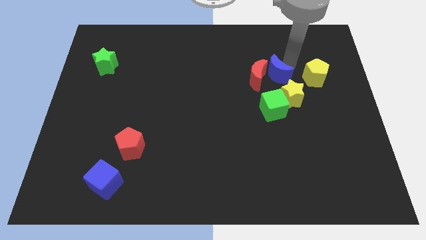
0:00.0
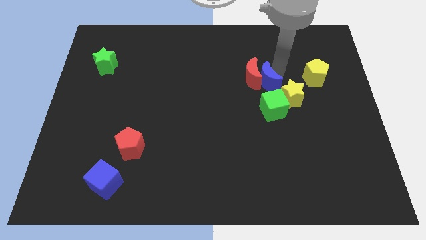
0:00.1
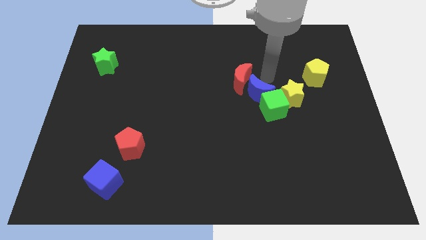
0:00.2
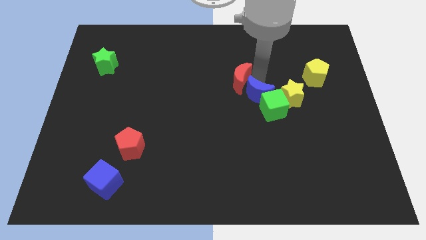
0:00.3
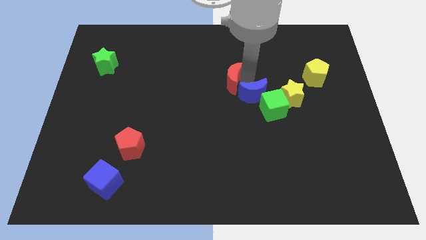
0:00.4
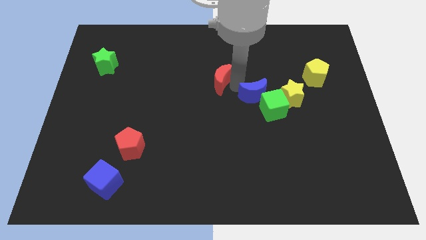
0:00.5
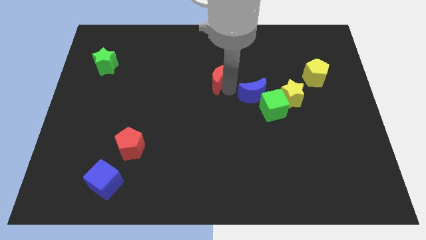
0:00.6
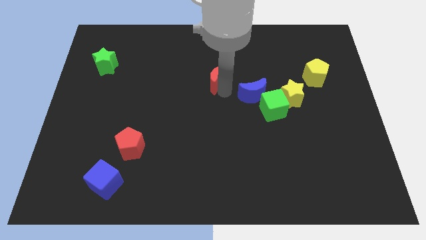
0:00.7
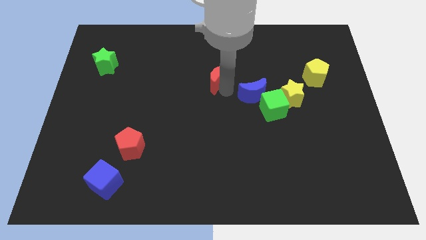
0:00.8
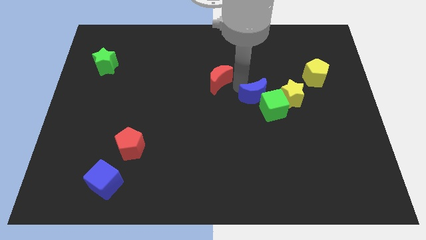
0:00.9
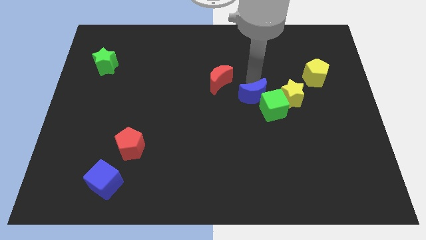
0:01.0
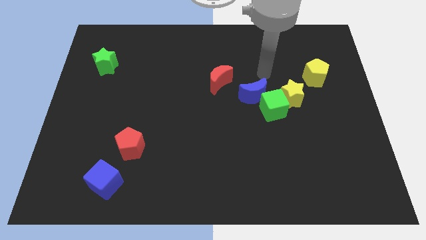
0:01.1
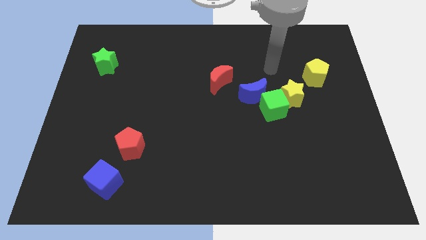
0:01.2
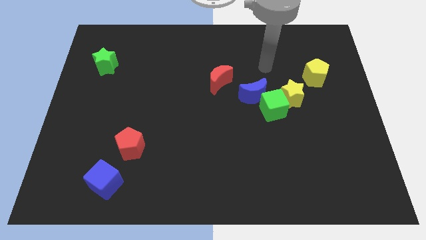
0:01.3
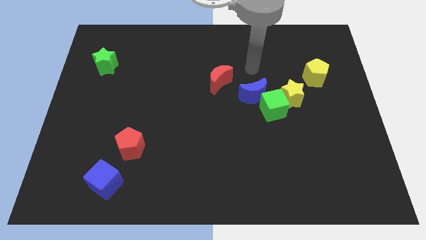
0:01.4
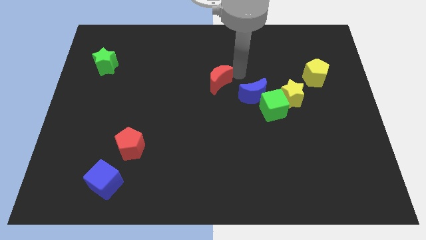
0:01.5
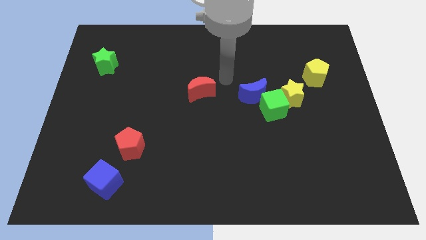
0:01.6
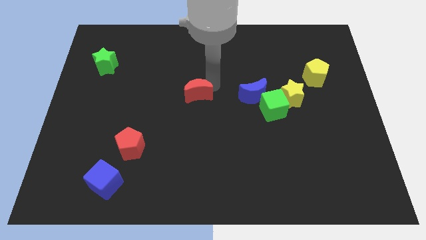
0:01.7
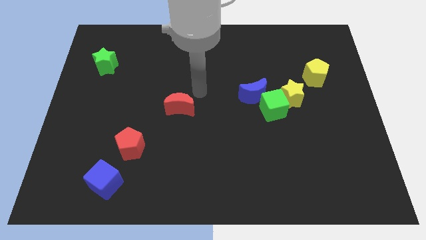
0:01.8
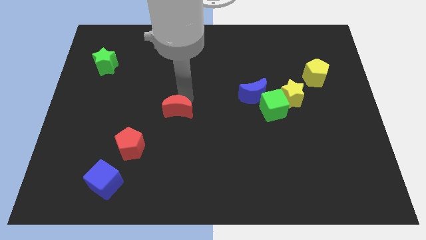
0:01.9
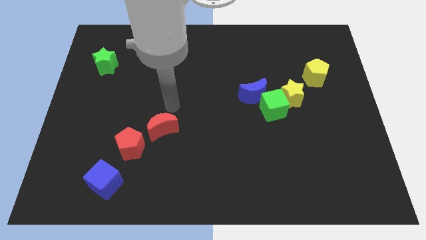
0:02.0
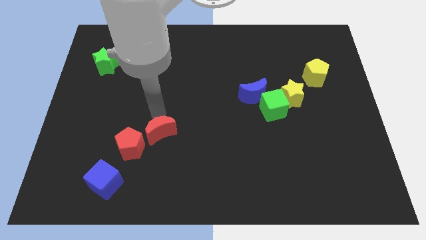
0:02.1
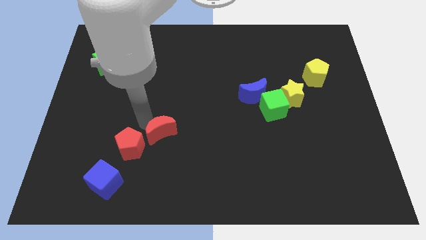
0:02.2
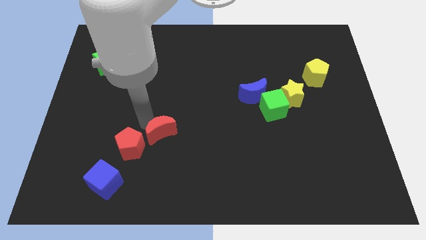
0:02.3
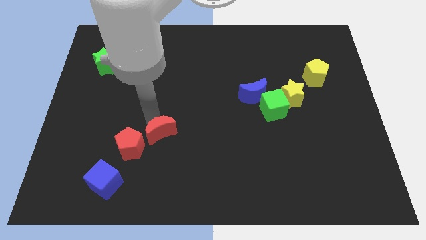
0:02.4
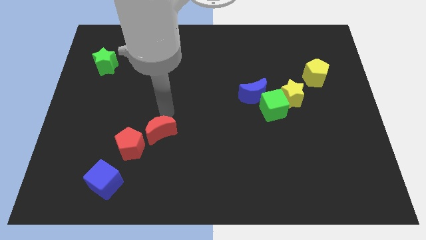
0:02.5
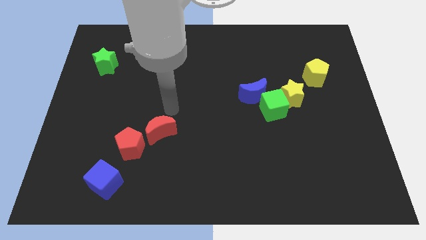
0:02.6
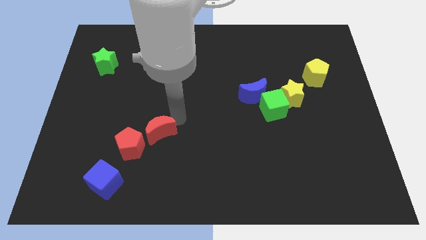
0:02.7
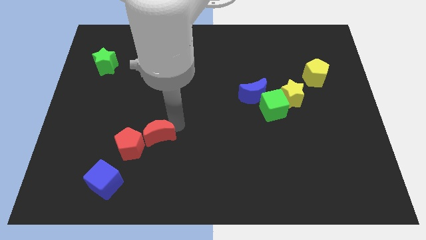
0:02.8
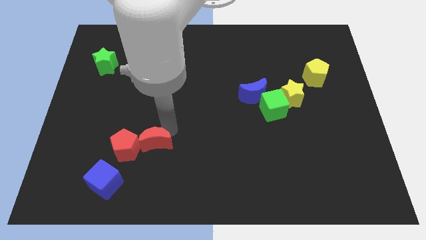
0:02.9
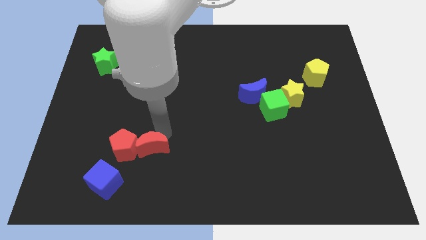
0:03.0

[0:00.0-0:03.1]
move the red moon close to the red pentagon

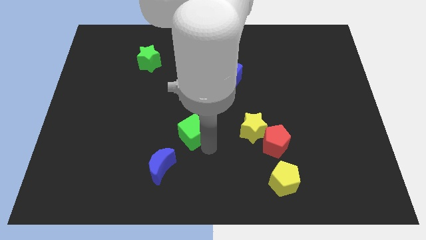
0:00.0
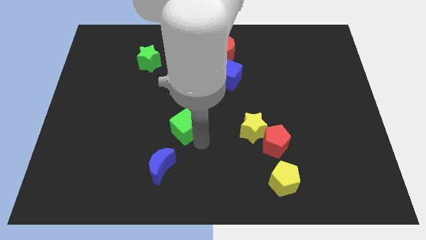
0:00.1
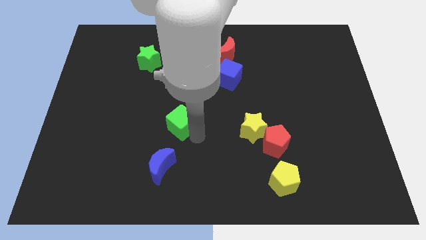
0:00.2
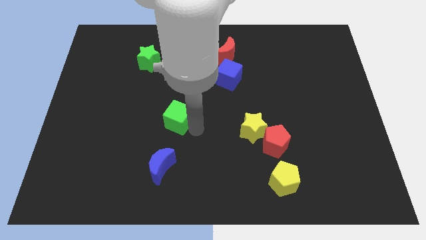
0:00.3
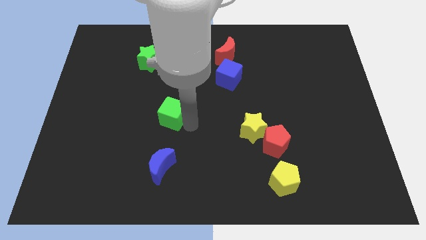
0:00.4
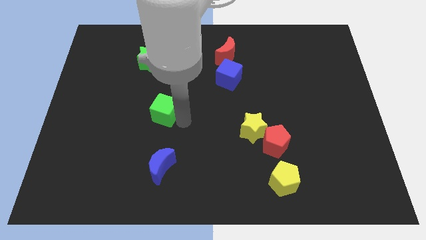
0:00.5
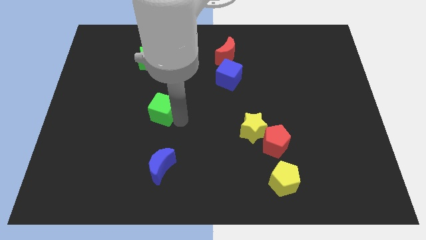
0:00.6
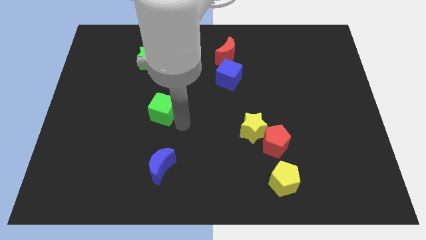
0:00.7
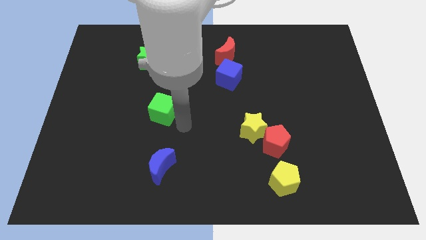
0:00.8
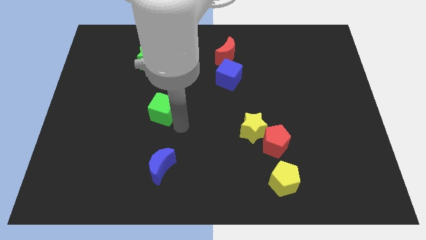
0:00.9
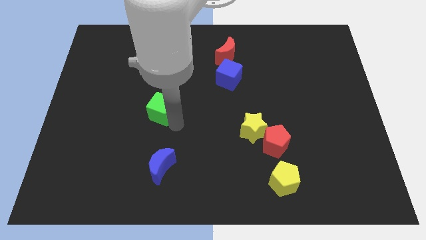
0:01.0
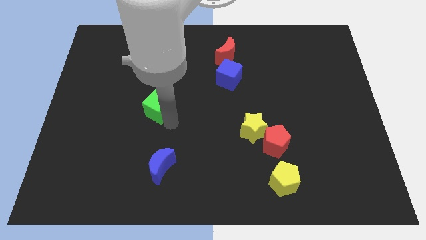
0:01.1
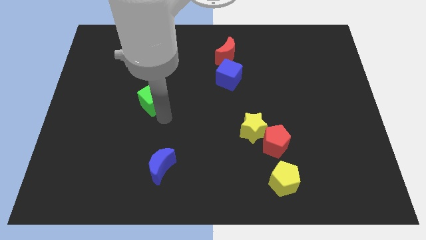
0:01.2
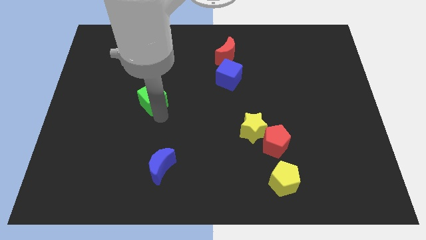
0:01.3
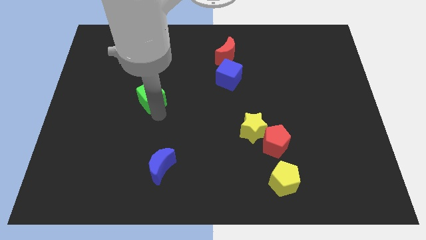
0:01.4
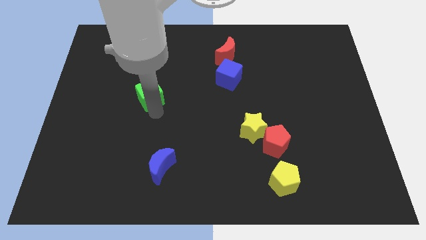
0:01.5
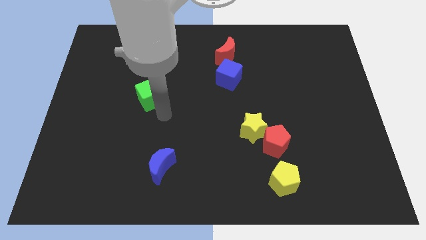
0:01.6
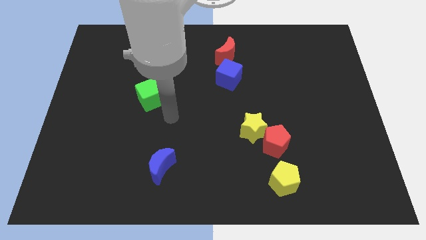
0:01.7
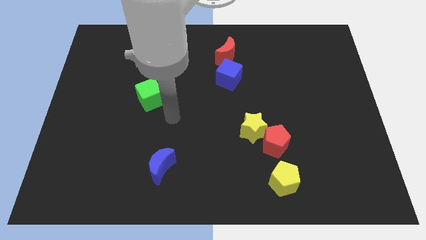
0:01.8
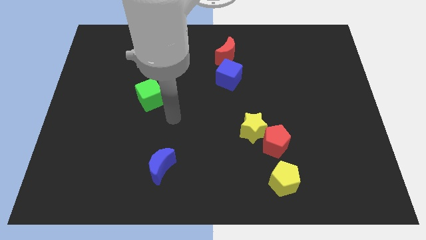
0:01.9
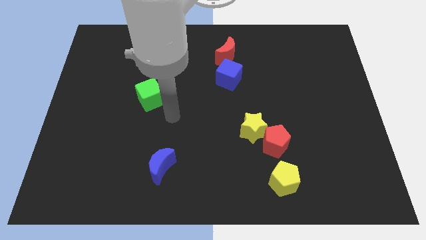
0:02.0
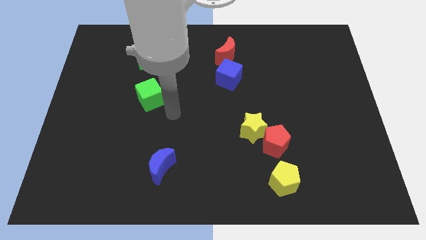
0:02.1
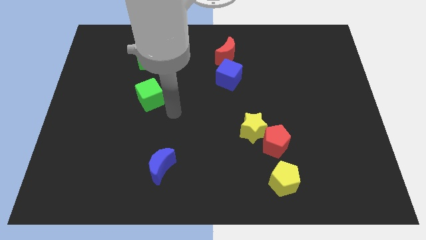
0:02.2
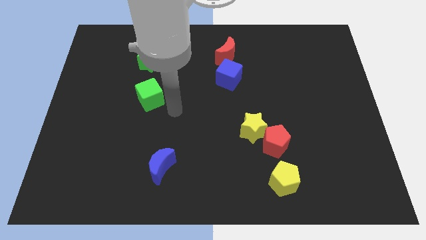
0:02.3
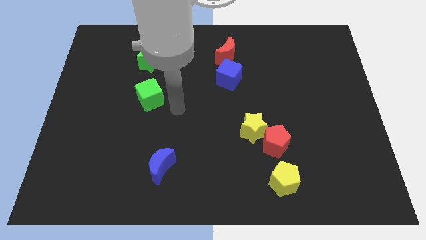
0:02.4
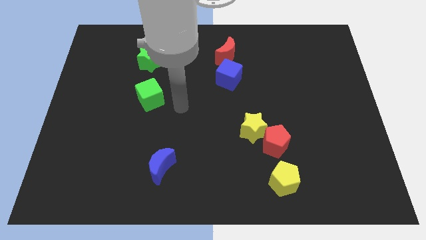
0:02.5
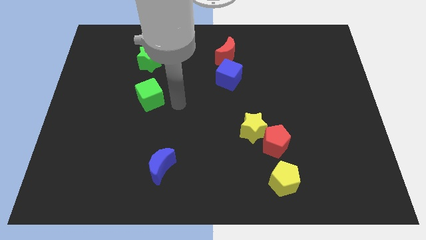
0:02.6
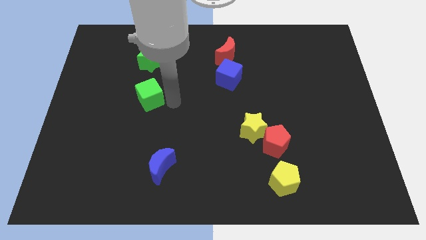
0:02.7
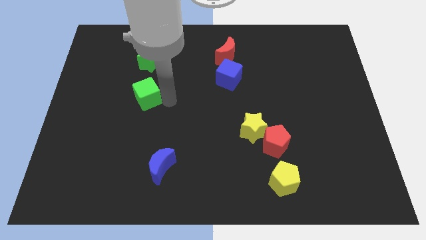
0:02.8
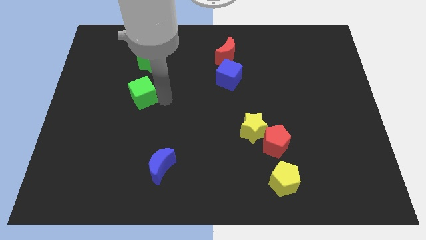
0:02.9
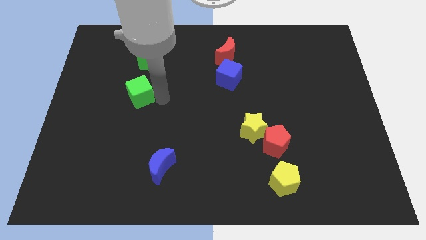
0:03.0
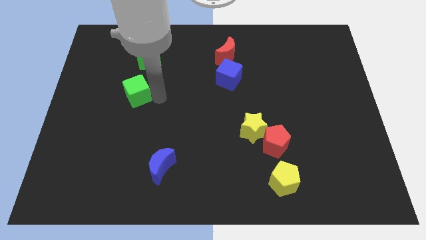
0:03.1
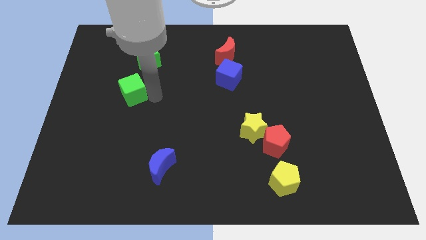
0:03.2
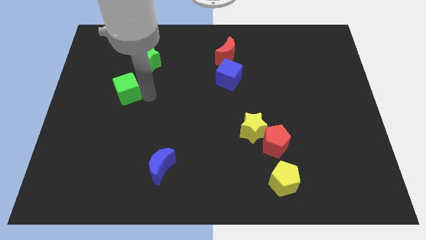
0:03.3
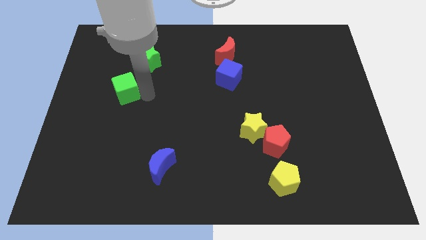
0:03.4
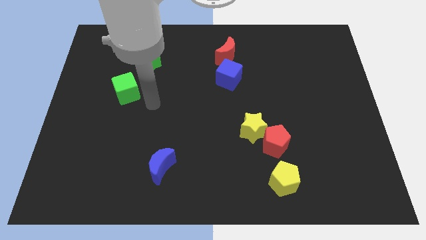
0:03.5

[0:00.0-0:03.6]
place the green cube towards top right

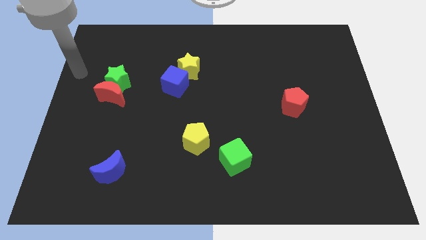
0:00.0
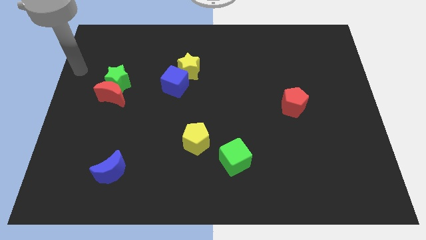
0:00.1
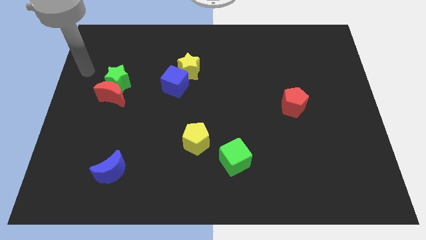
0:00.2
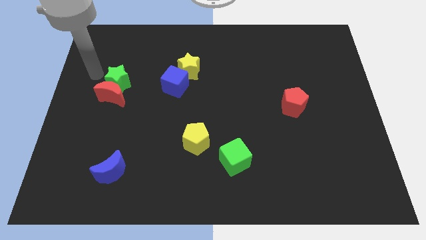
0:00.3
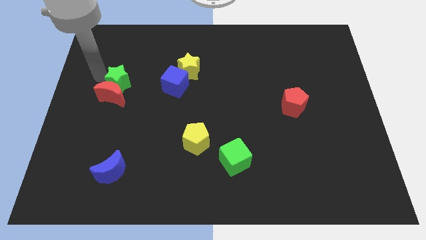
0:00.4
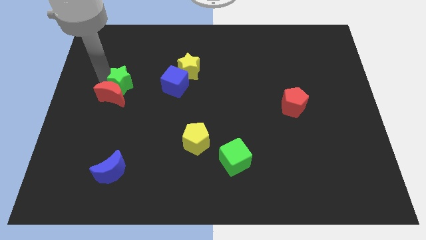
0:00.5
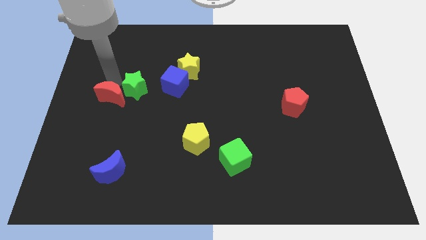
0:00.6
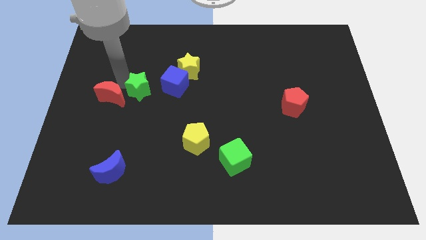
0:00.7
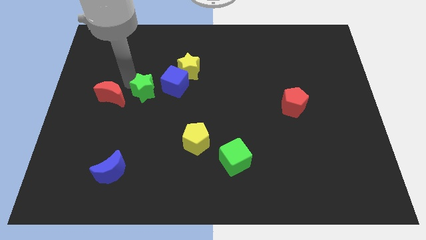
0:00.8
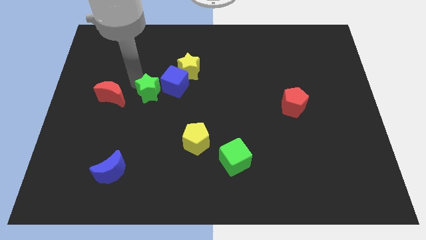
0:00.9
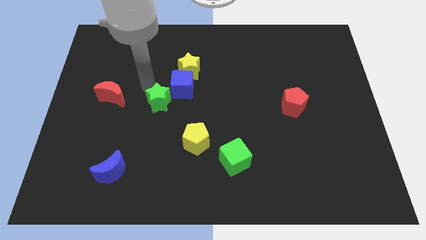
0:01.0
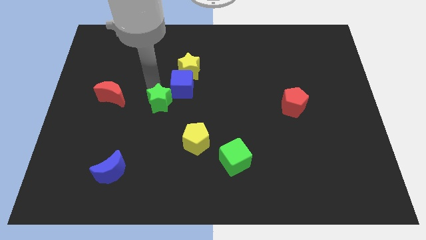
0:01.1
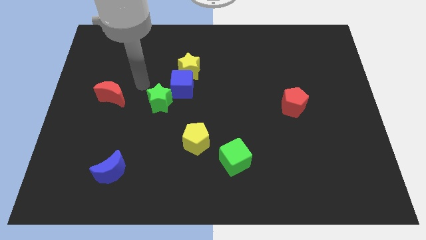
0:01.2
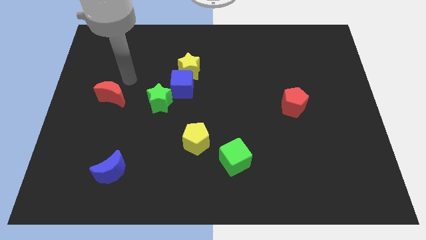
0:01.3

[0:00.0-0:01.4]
place the green stardiagonally bottom left of the blue cube

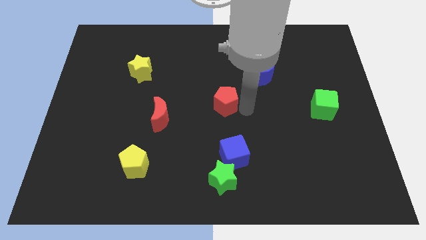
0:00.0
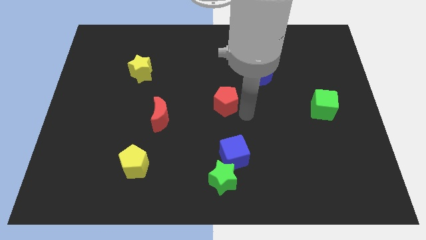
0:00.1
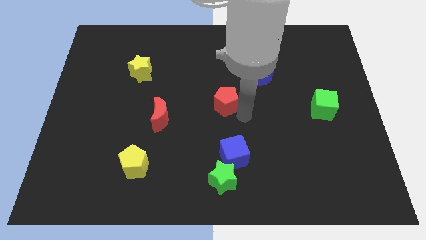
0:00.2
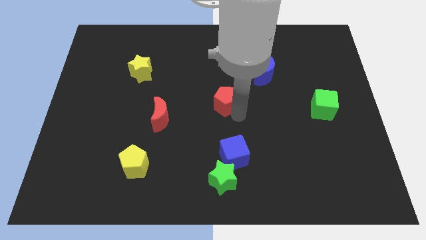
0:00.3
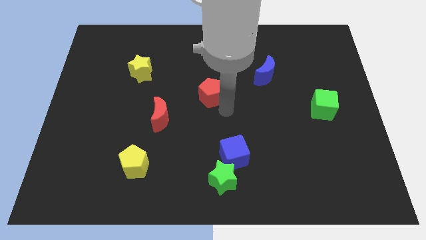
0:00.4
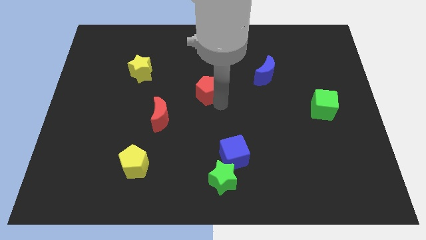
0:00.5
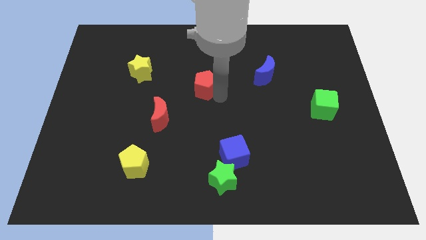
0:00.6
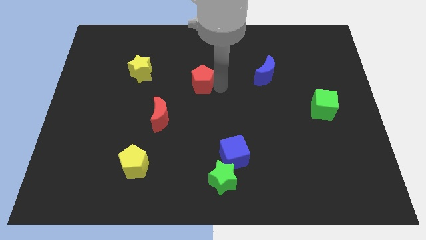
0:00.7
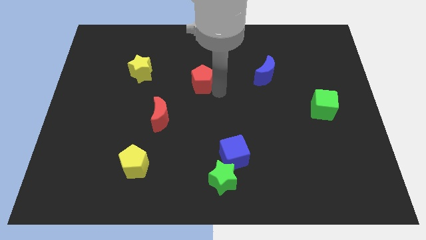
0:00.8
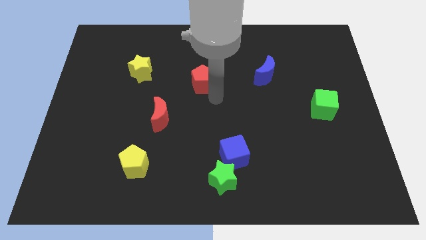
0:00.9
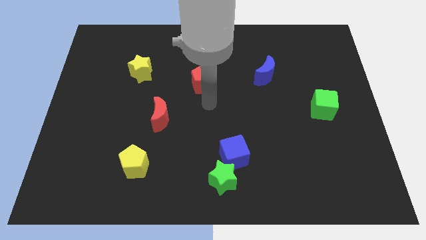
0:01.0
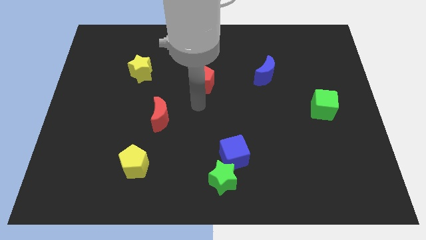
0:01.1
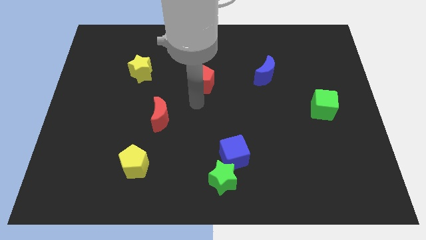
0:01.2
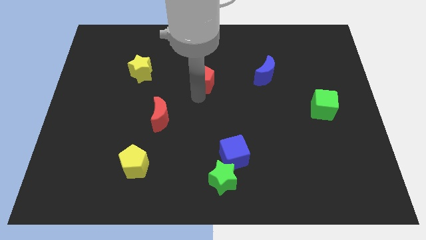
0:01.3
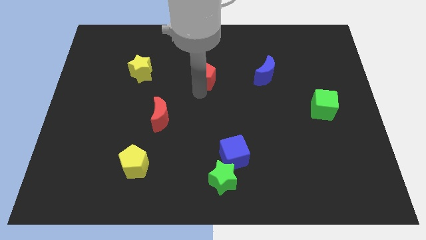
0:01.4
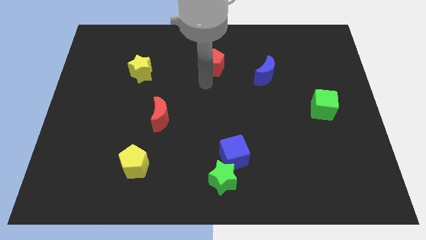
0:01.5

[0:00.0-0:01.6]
place the red pentagon left to the blue moon
